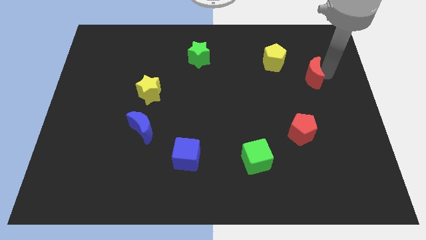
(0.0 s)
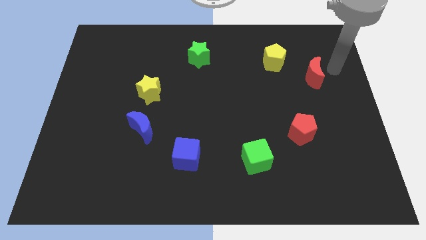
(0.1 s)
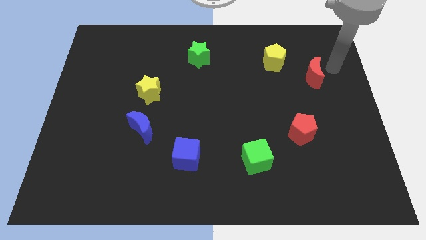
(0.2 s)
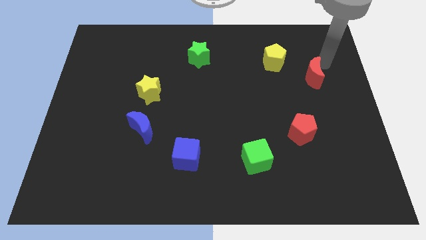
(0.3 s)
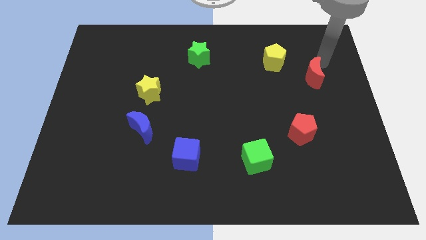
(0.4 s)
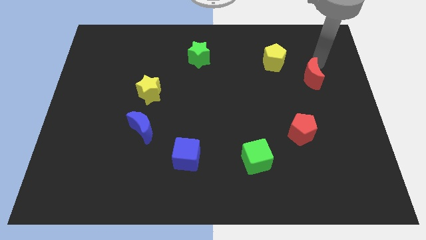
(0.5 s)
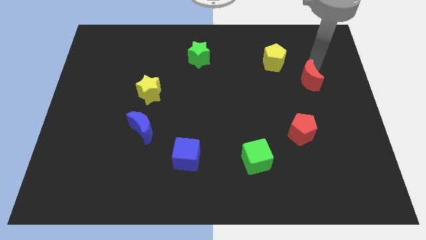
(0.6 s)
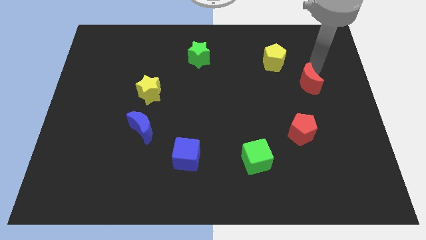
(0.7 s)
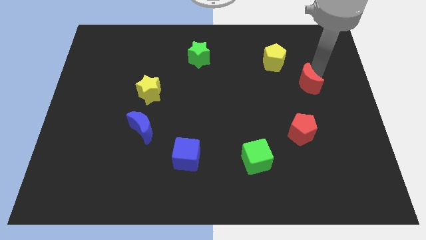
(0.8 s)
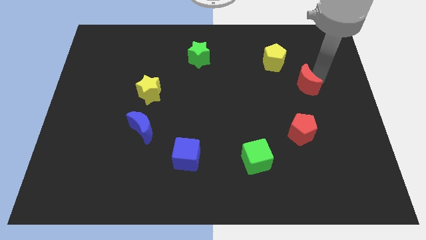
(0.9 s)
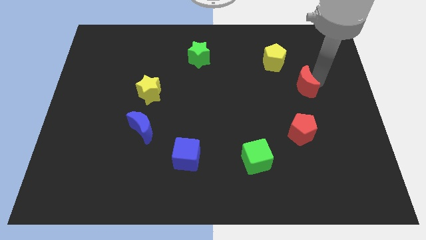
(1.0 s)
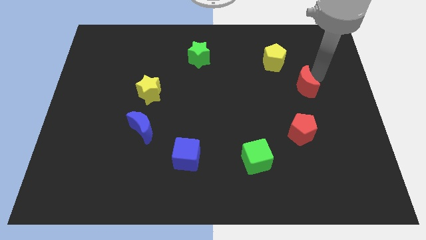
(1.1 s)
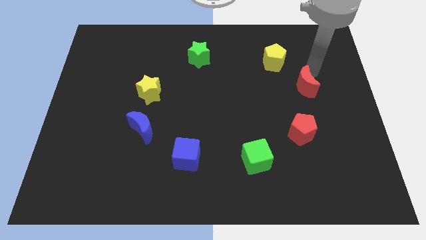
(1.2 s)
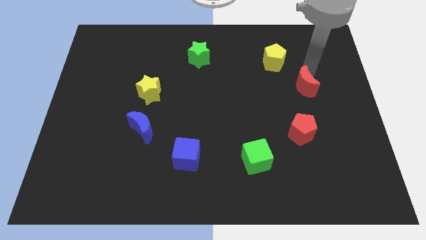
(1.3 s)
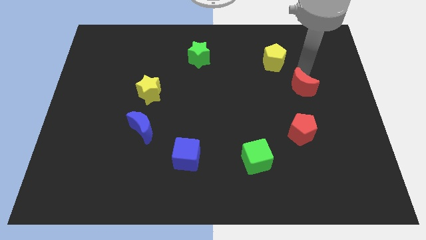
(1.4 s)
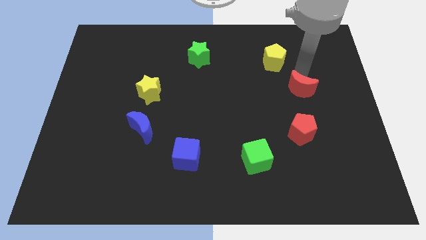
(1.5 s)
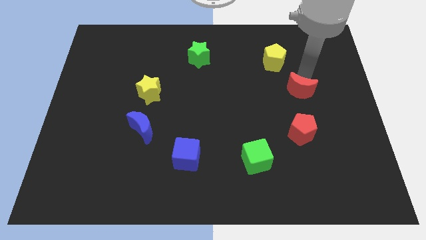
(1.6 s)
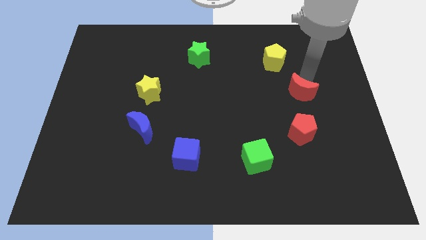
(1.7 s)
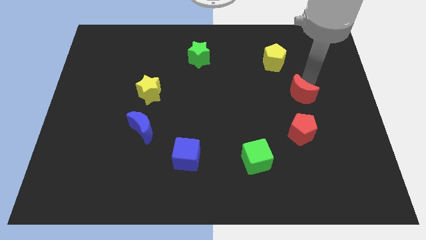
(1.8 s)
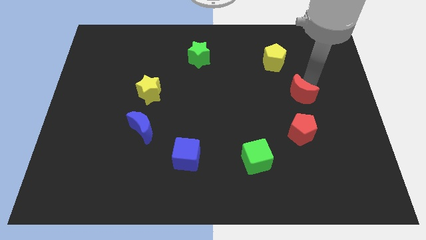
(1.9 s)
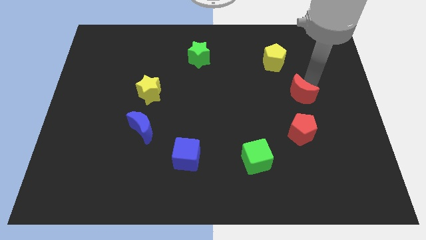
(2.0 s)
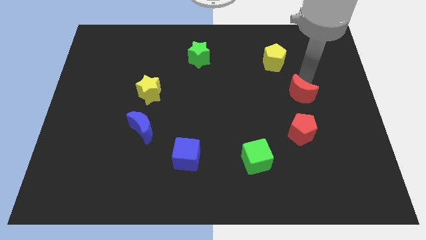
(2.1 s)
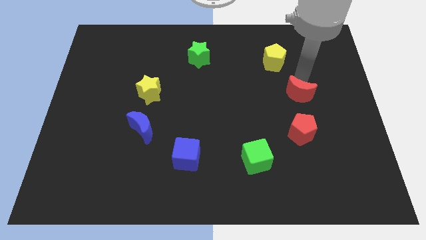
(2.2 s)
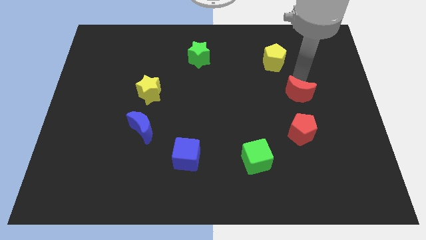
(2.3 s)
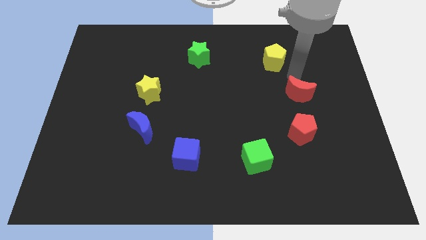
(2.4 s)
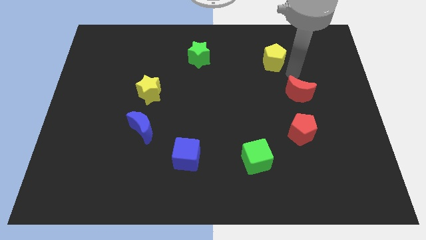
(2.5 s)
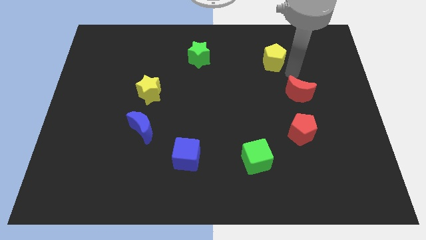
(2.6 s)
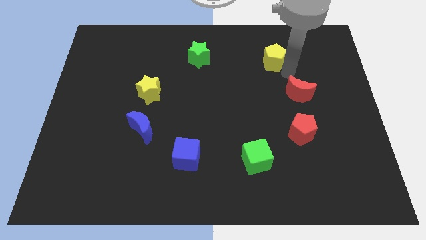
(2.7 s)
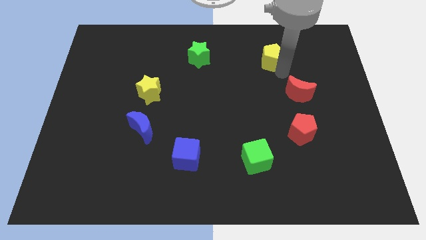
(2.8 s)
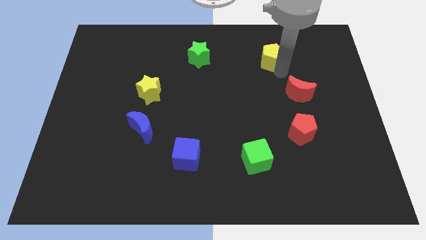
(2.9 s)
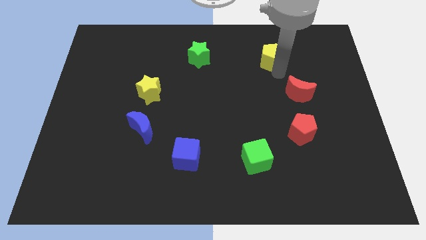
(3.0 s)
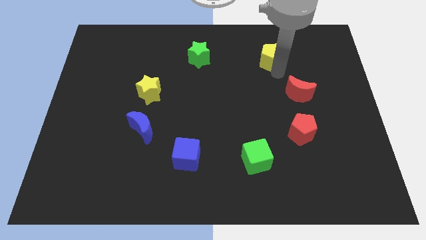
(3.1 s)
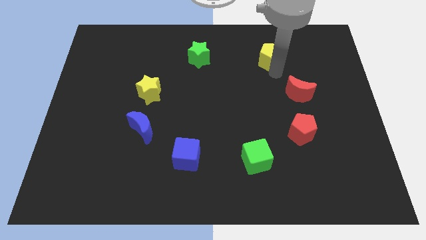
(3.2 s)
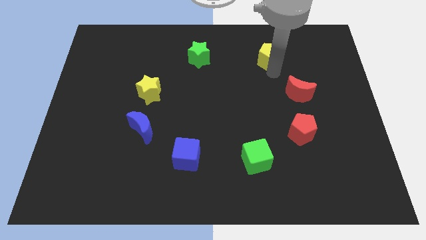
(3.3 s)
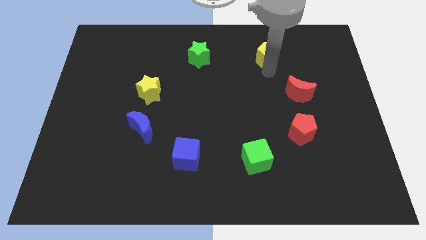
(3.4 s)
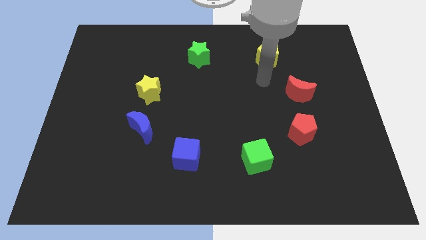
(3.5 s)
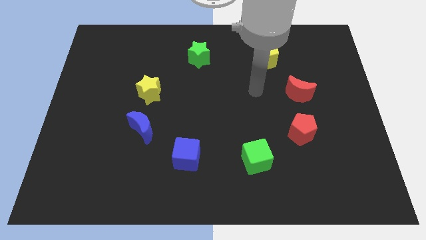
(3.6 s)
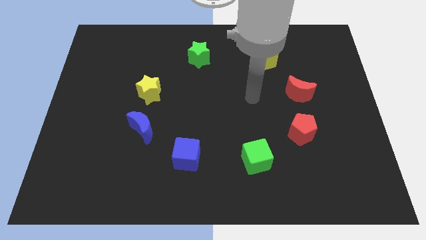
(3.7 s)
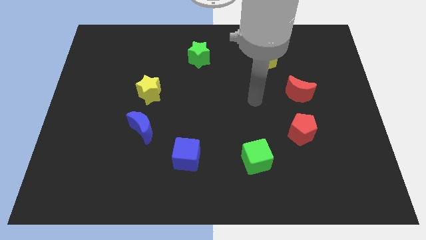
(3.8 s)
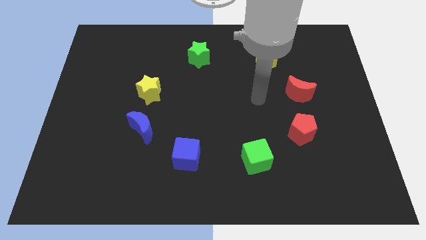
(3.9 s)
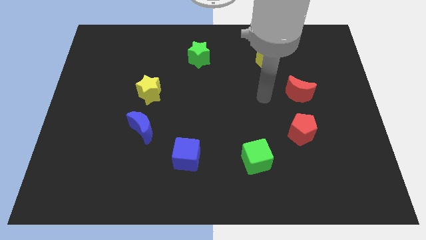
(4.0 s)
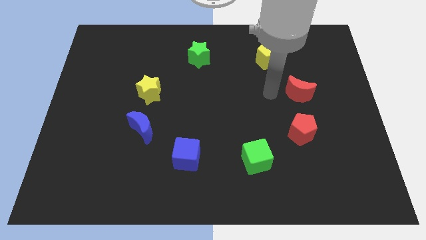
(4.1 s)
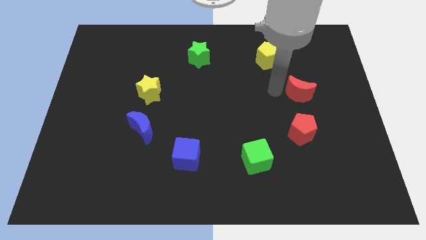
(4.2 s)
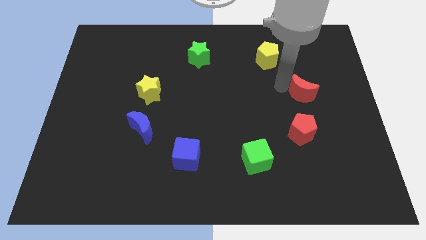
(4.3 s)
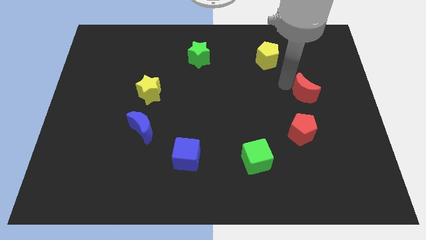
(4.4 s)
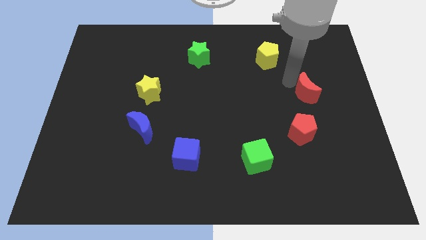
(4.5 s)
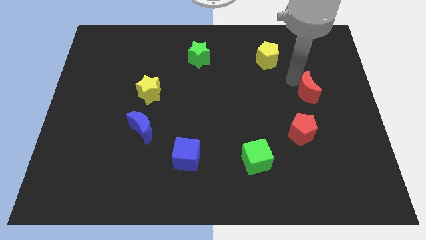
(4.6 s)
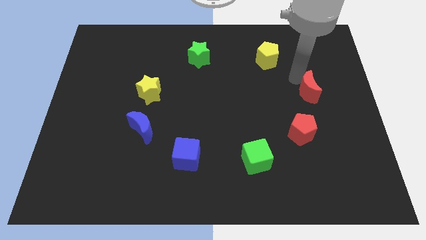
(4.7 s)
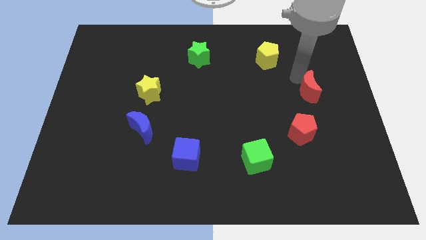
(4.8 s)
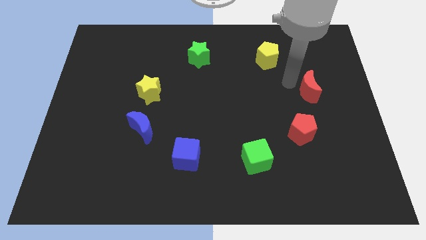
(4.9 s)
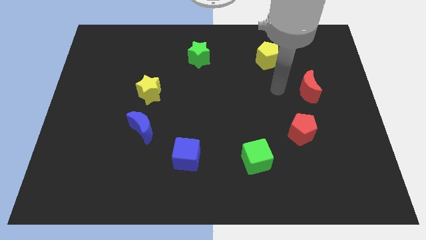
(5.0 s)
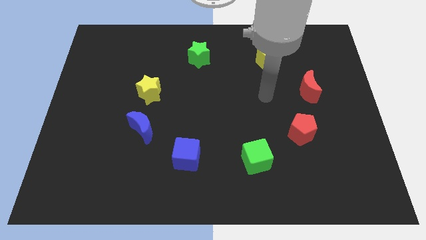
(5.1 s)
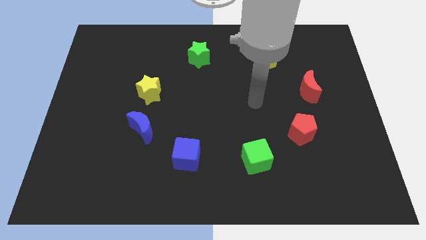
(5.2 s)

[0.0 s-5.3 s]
make a circle by joining with the other blocks

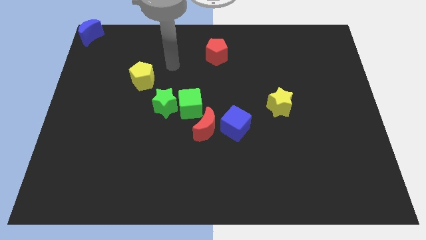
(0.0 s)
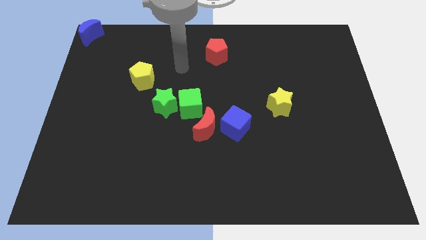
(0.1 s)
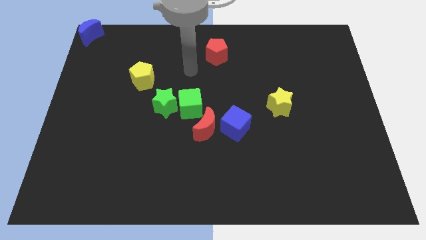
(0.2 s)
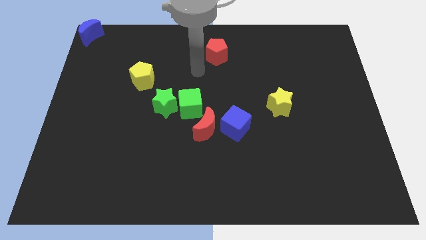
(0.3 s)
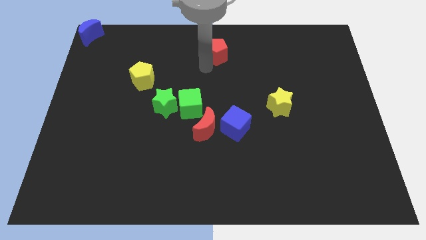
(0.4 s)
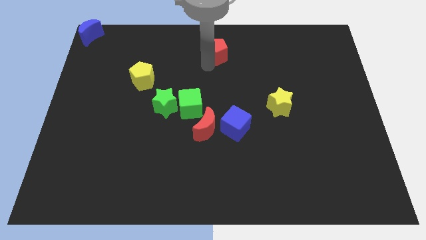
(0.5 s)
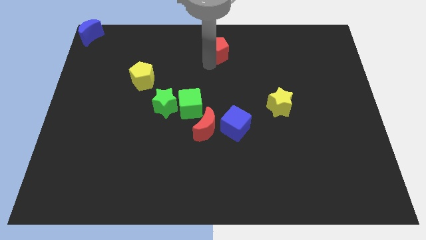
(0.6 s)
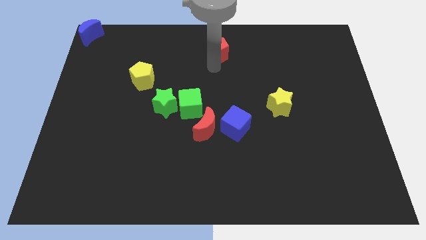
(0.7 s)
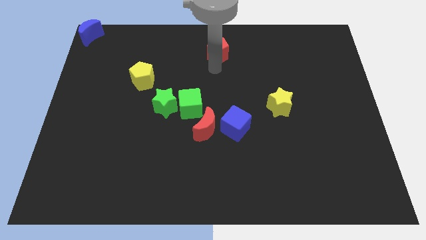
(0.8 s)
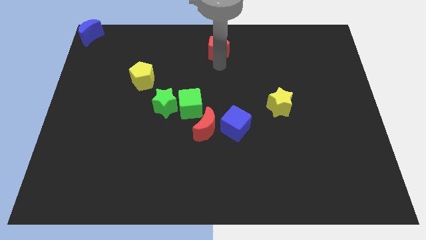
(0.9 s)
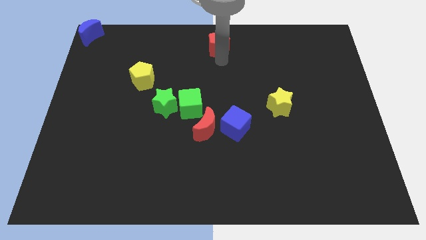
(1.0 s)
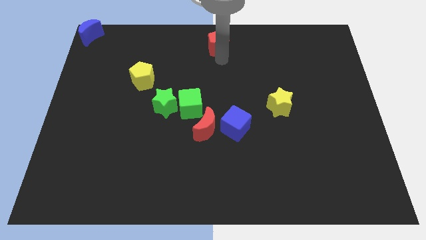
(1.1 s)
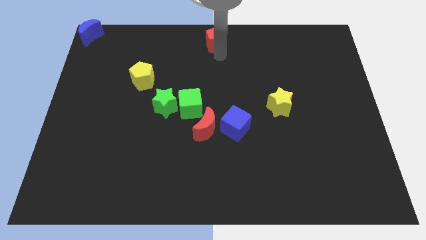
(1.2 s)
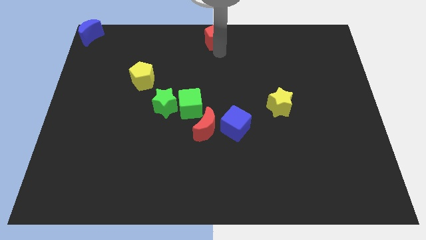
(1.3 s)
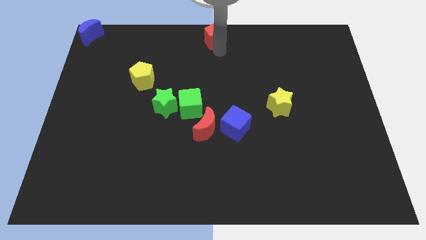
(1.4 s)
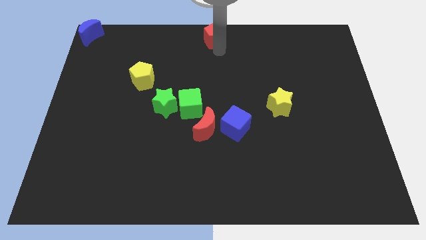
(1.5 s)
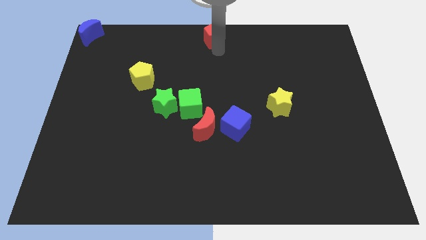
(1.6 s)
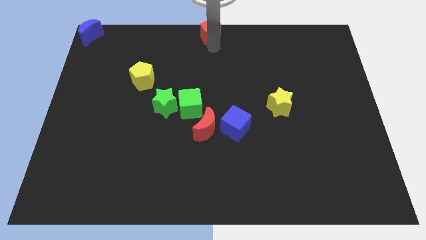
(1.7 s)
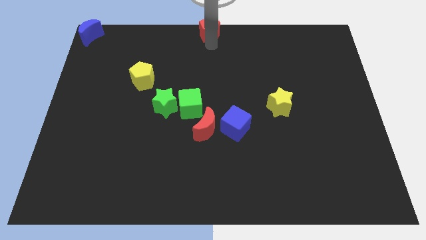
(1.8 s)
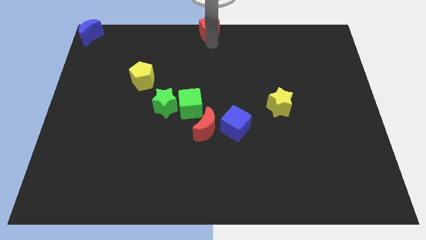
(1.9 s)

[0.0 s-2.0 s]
move the red pentagon to the top middle

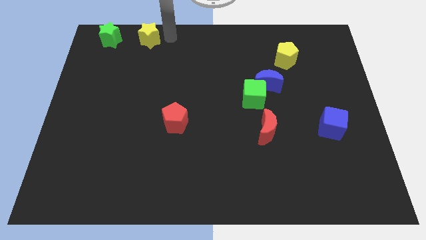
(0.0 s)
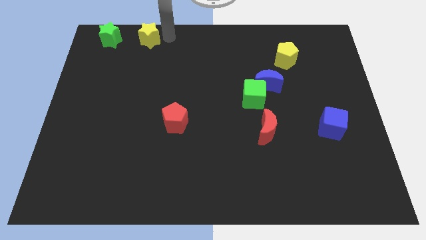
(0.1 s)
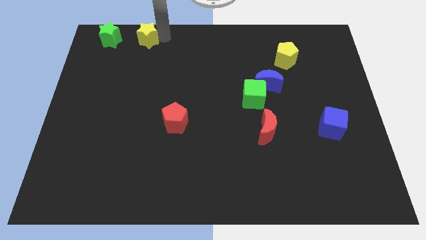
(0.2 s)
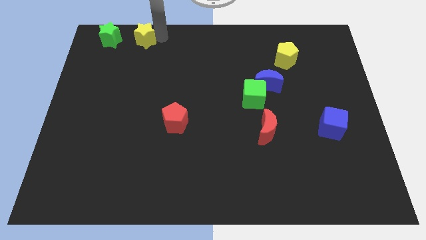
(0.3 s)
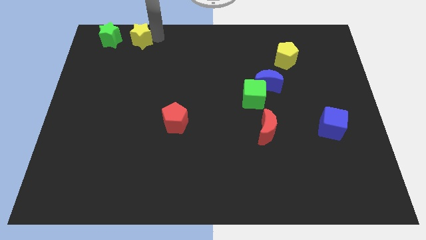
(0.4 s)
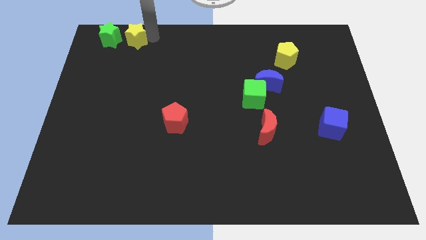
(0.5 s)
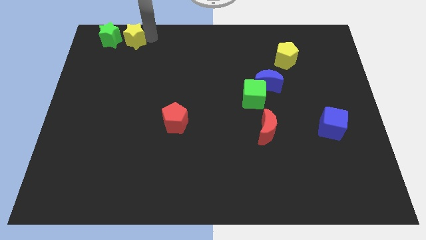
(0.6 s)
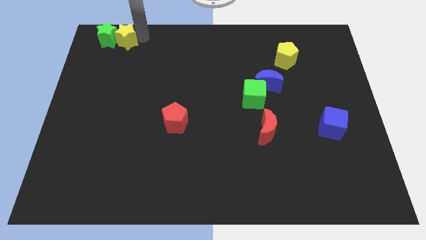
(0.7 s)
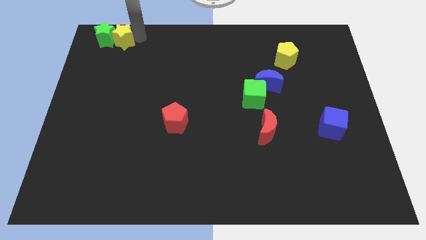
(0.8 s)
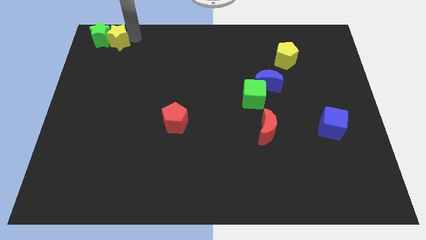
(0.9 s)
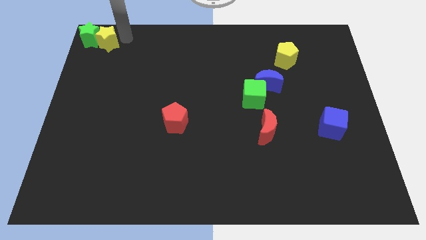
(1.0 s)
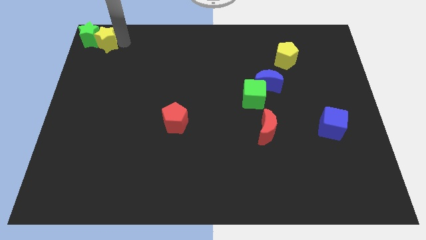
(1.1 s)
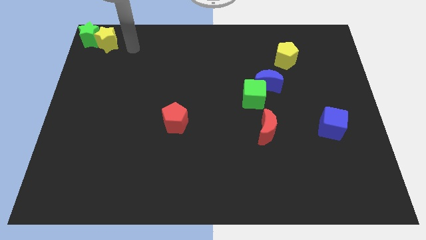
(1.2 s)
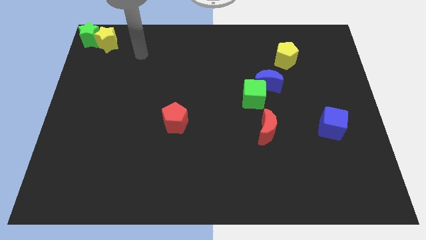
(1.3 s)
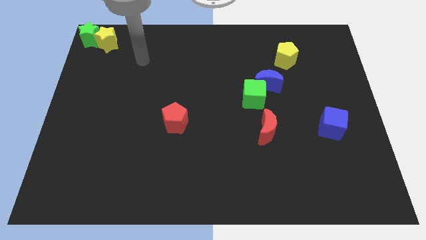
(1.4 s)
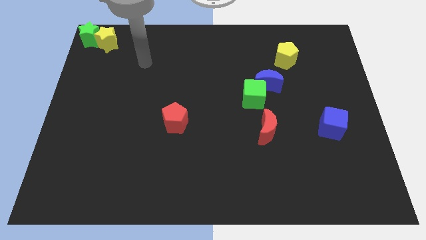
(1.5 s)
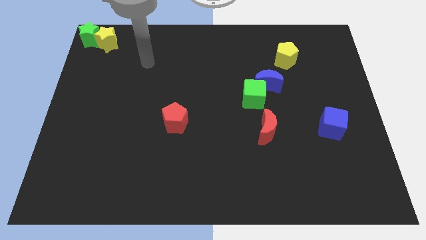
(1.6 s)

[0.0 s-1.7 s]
move the yellow star close to the green star at the top left corner of the board
